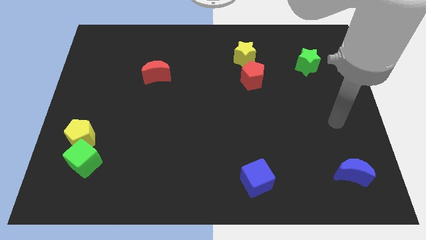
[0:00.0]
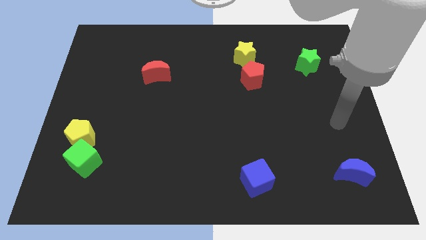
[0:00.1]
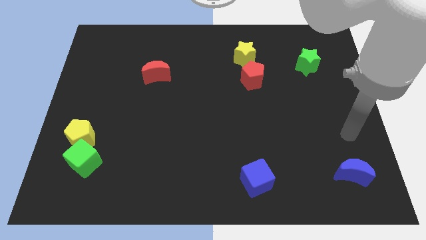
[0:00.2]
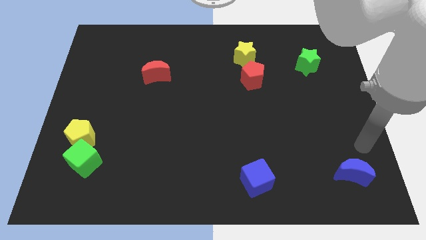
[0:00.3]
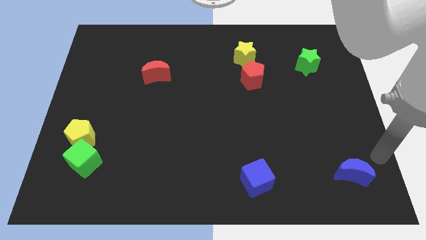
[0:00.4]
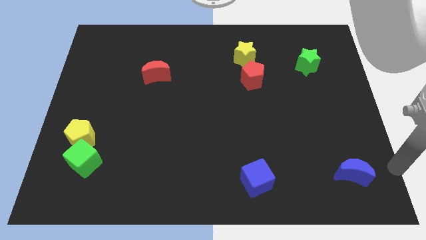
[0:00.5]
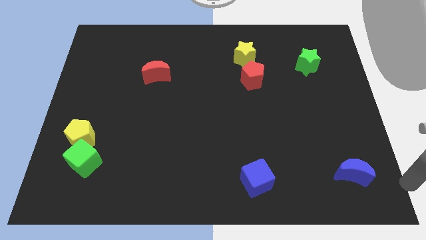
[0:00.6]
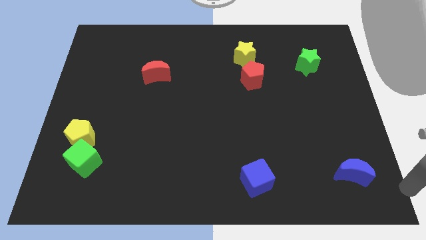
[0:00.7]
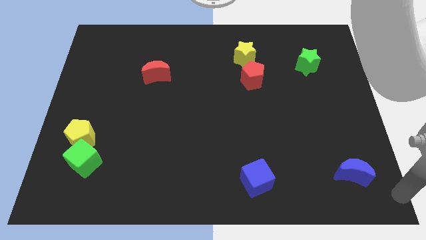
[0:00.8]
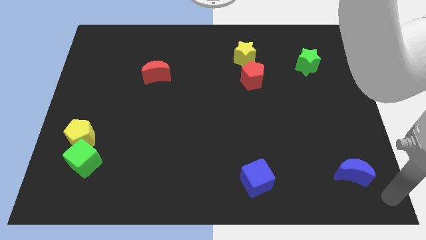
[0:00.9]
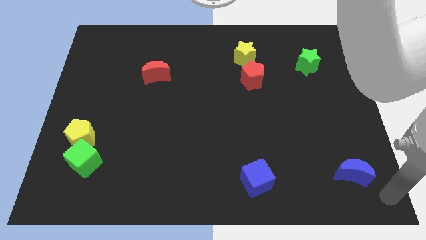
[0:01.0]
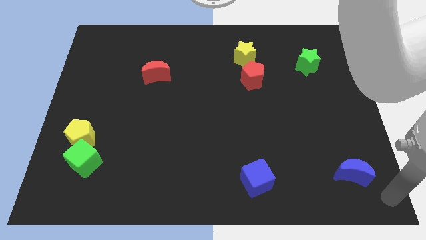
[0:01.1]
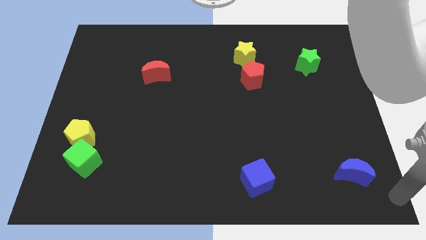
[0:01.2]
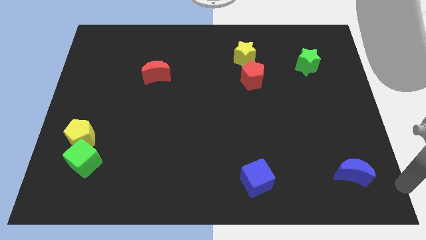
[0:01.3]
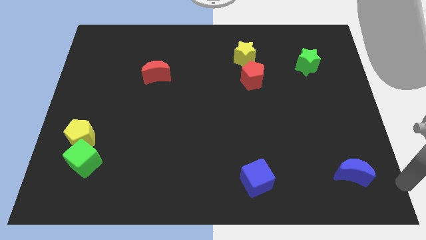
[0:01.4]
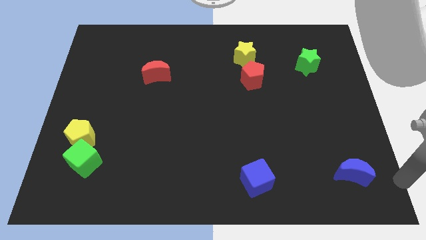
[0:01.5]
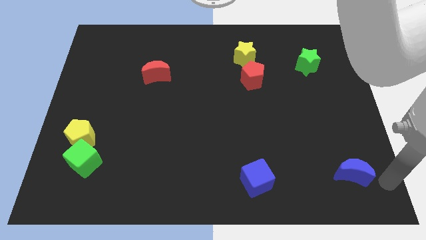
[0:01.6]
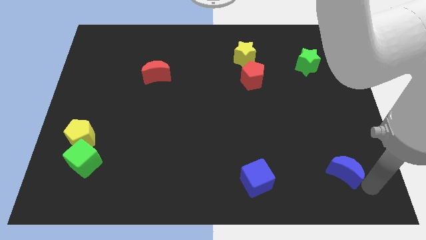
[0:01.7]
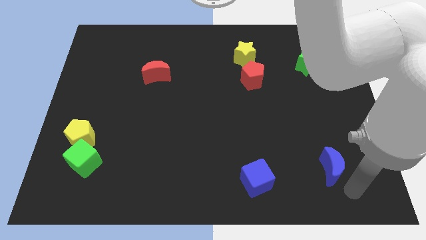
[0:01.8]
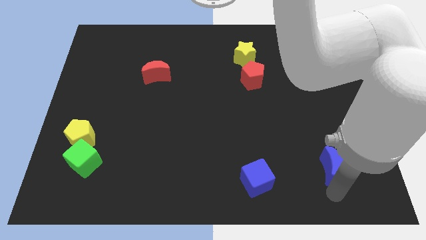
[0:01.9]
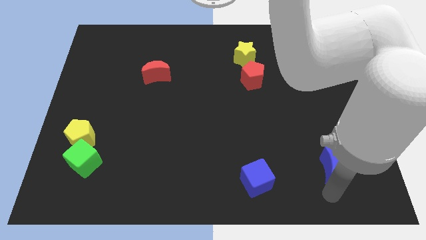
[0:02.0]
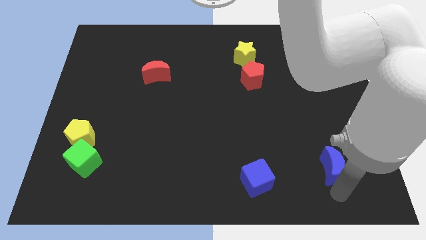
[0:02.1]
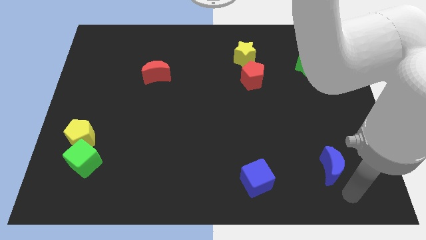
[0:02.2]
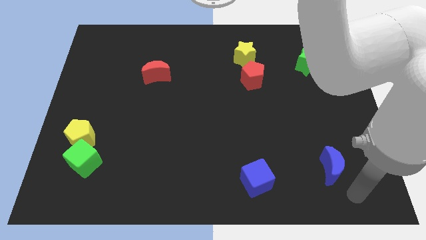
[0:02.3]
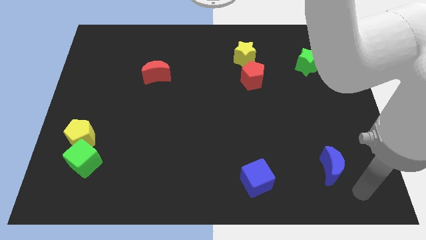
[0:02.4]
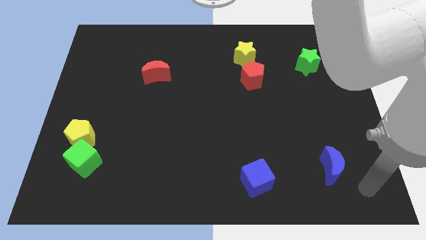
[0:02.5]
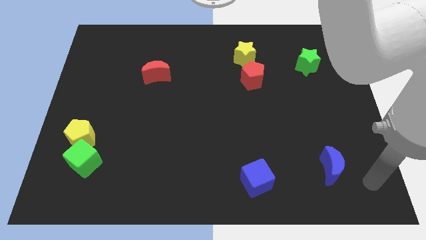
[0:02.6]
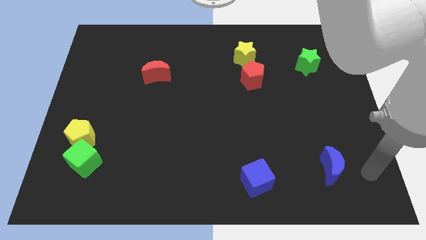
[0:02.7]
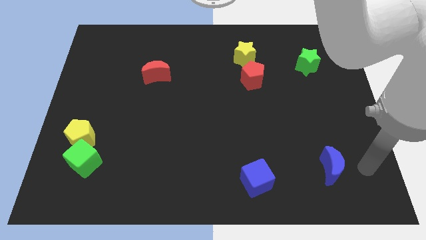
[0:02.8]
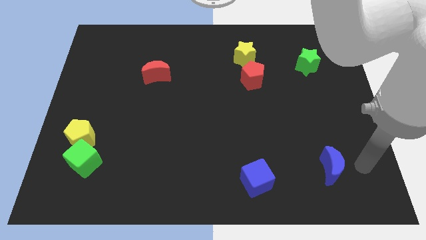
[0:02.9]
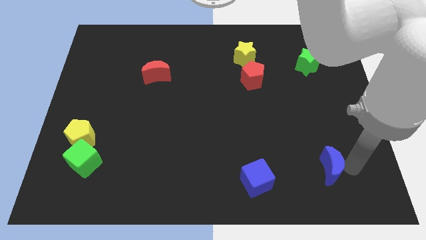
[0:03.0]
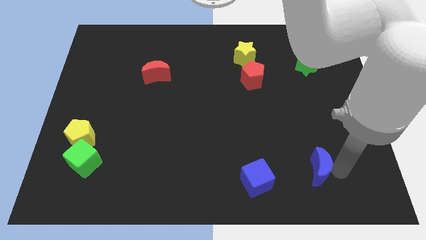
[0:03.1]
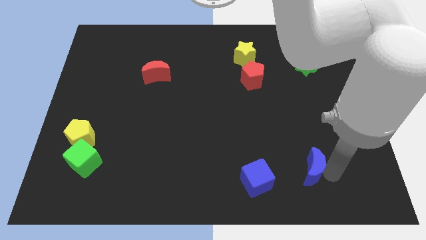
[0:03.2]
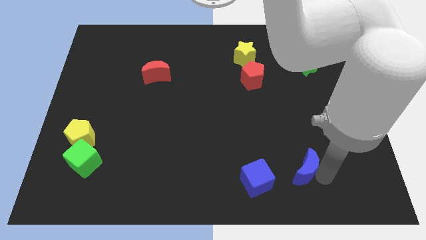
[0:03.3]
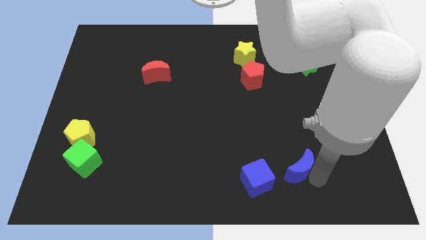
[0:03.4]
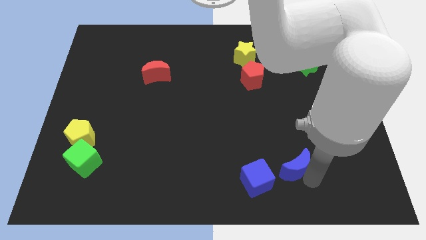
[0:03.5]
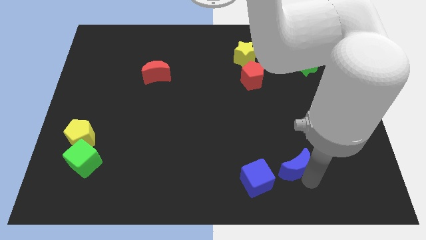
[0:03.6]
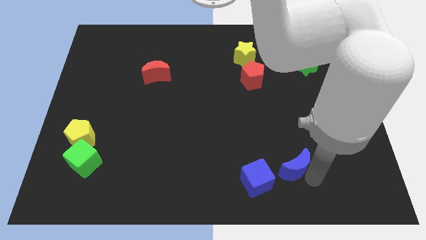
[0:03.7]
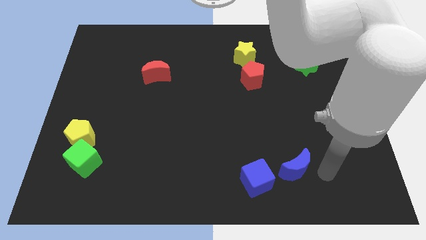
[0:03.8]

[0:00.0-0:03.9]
move the blue moon towards the blue cube

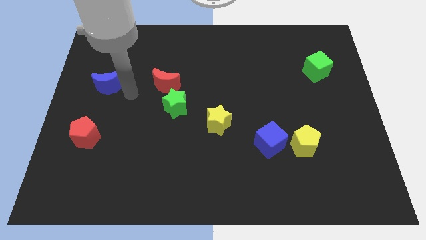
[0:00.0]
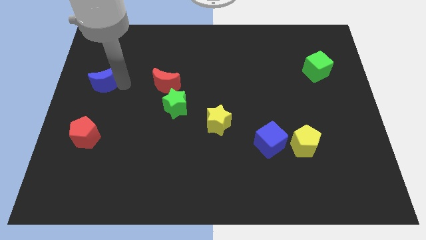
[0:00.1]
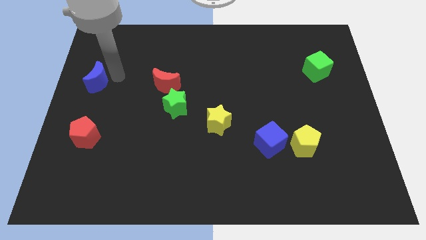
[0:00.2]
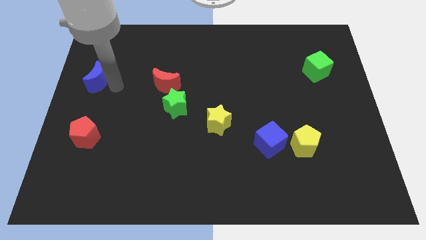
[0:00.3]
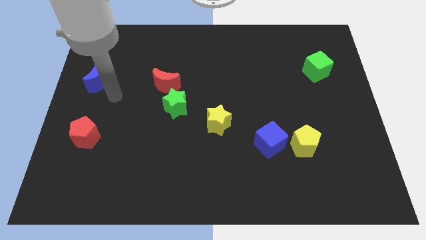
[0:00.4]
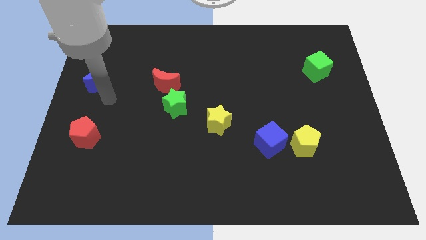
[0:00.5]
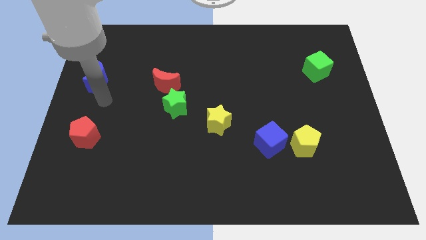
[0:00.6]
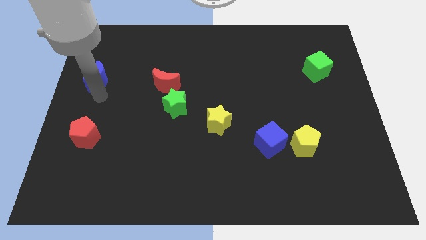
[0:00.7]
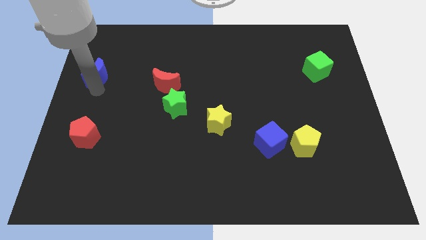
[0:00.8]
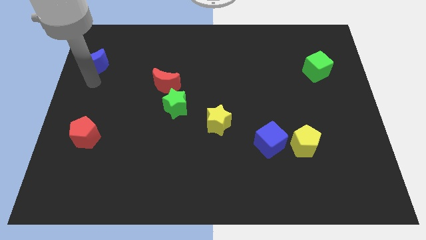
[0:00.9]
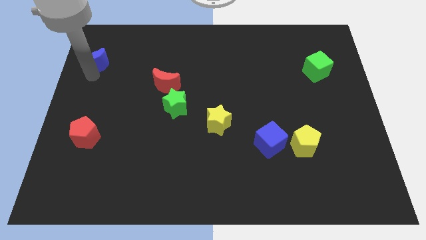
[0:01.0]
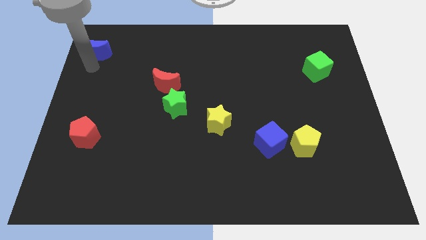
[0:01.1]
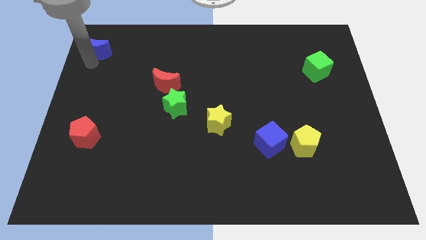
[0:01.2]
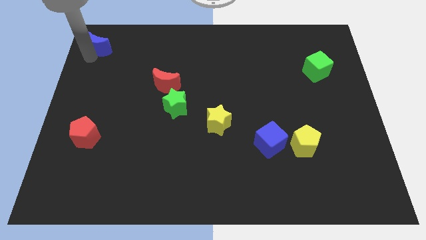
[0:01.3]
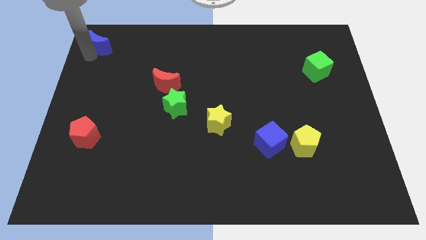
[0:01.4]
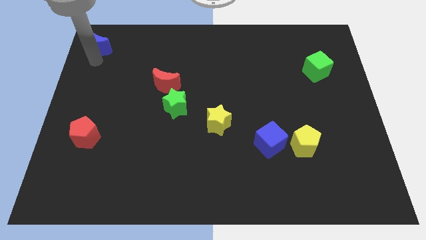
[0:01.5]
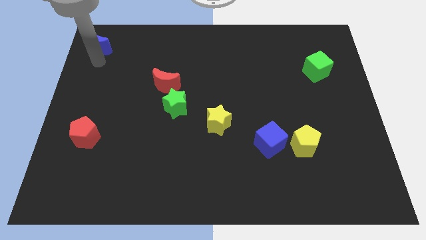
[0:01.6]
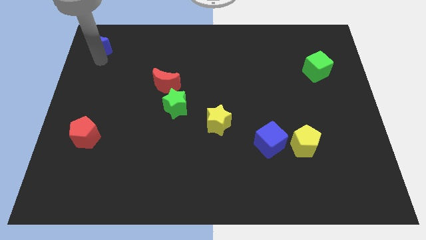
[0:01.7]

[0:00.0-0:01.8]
place the blue moon to the top left corner of the board

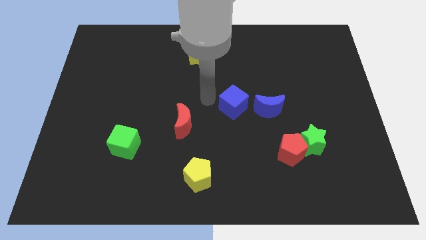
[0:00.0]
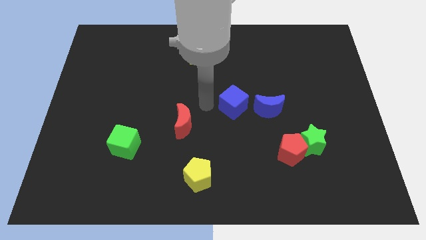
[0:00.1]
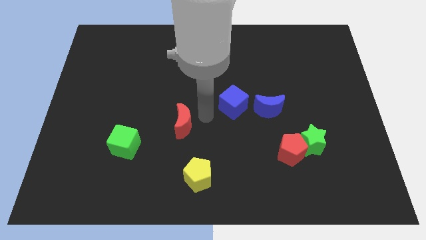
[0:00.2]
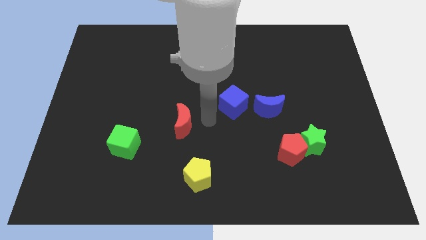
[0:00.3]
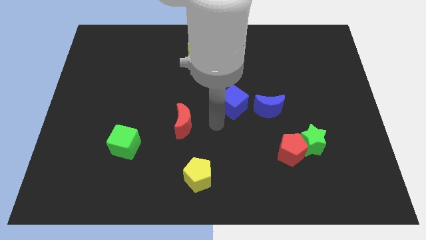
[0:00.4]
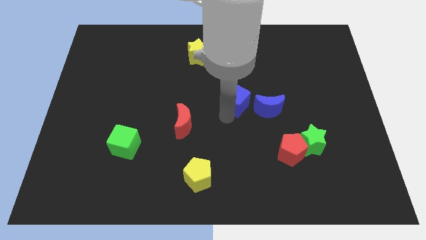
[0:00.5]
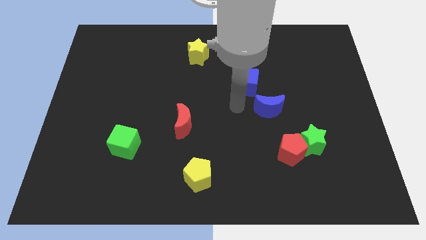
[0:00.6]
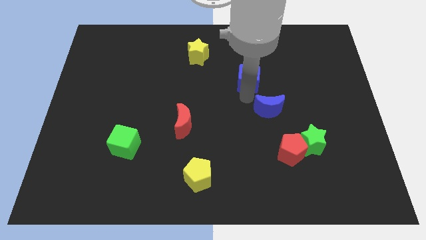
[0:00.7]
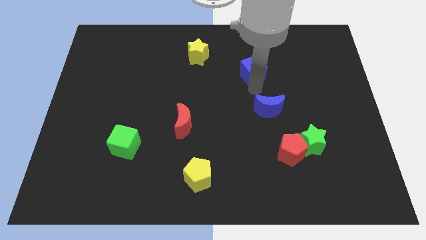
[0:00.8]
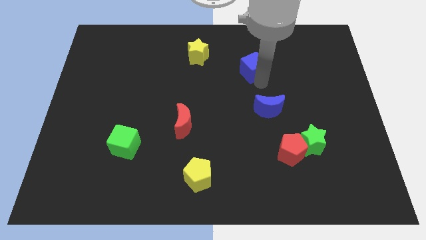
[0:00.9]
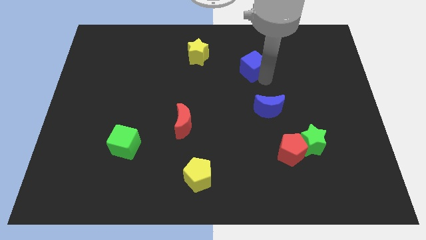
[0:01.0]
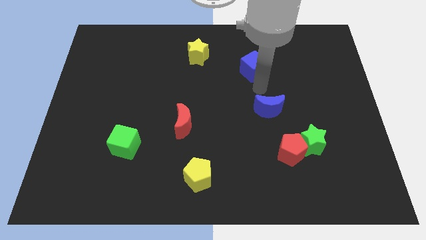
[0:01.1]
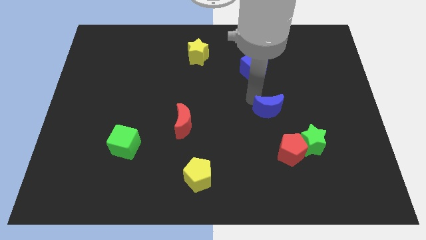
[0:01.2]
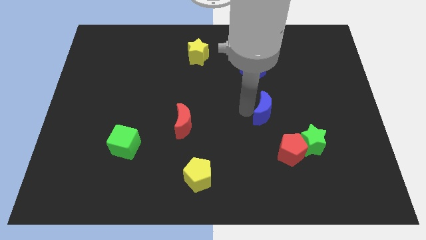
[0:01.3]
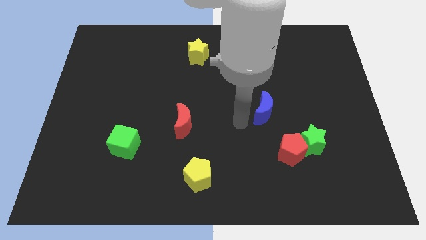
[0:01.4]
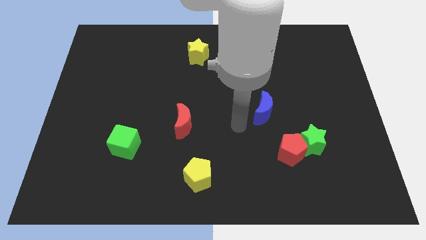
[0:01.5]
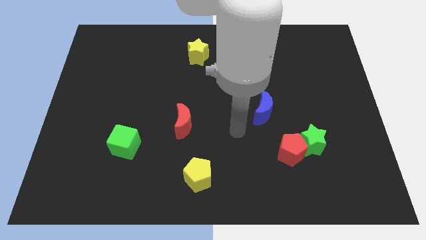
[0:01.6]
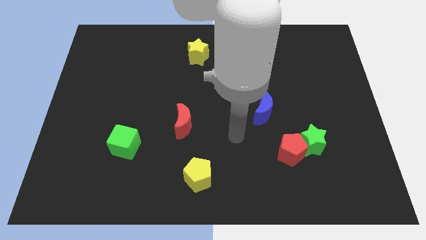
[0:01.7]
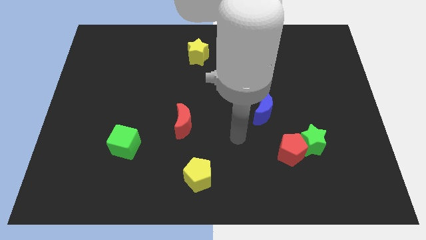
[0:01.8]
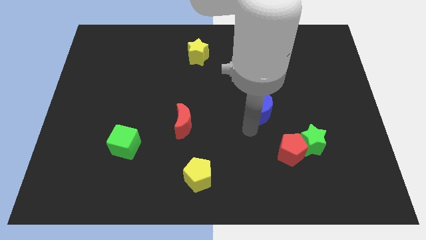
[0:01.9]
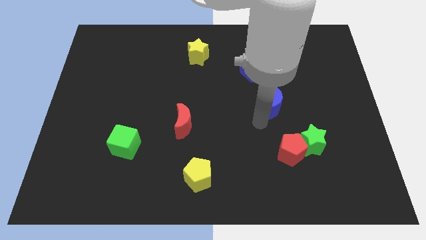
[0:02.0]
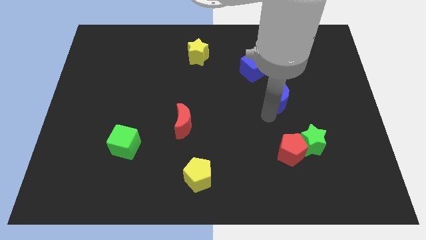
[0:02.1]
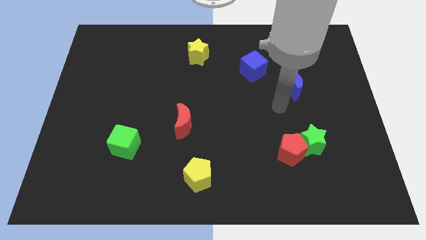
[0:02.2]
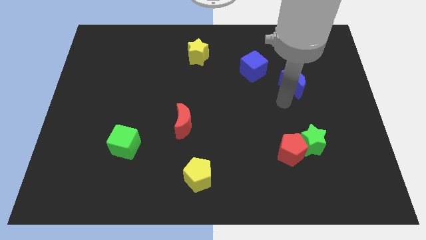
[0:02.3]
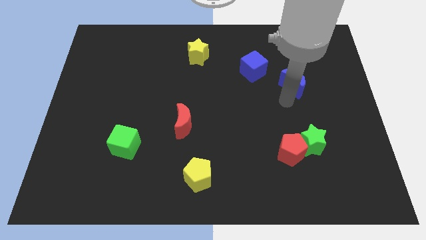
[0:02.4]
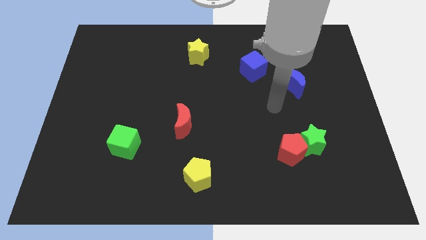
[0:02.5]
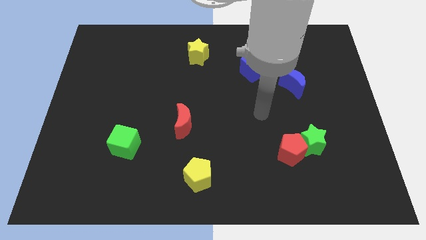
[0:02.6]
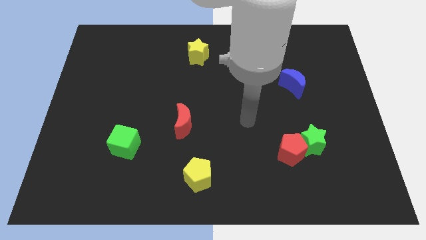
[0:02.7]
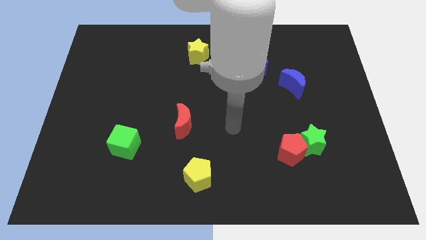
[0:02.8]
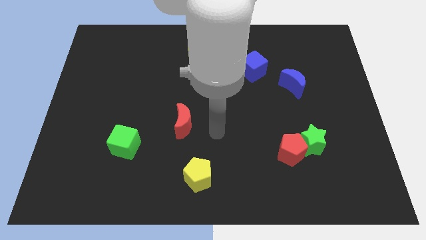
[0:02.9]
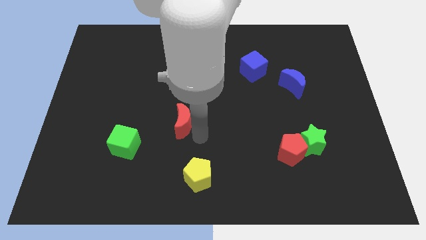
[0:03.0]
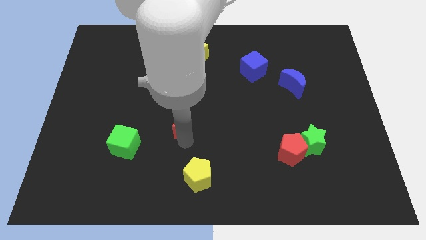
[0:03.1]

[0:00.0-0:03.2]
slide the blue moon diagonally bottom right to the blue cube
